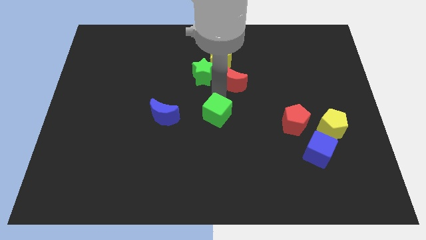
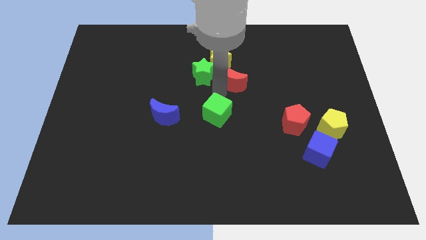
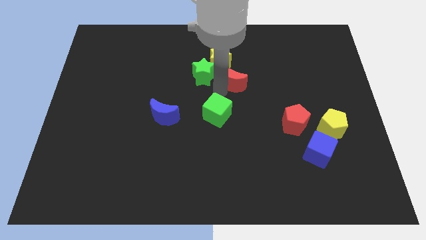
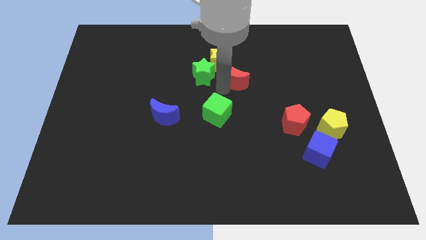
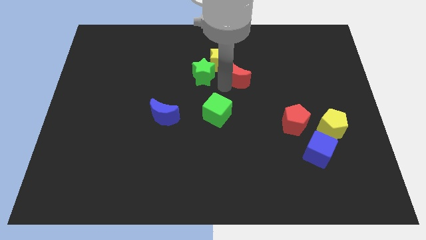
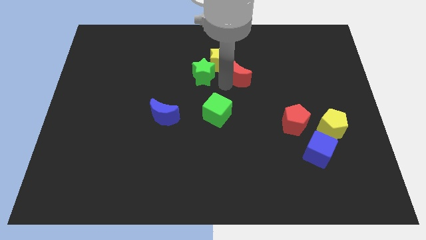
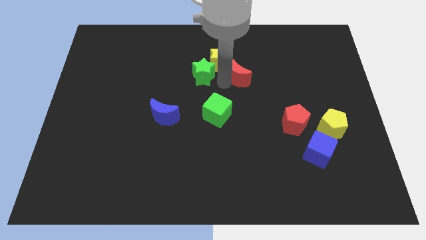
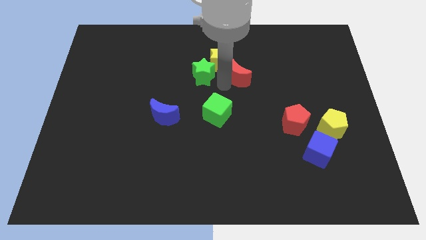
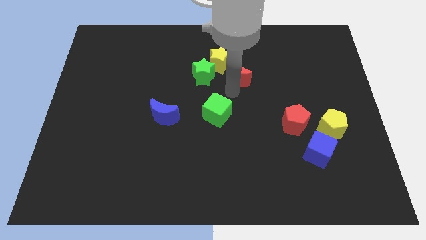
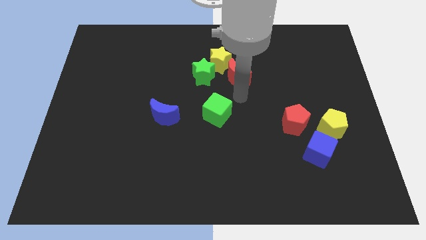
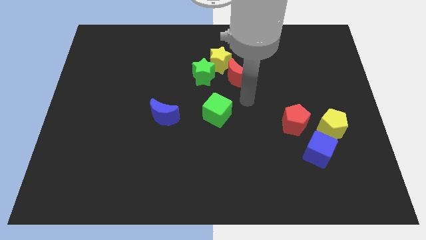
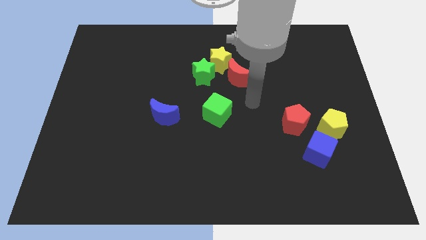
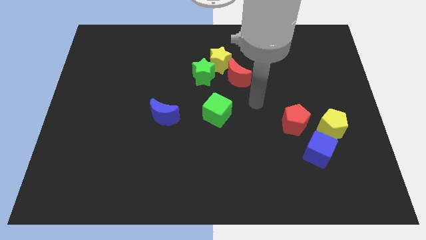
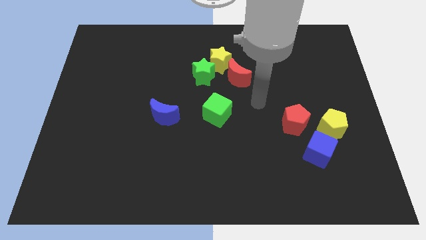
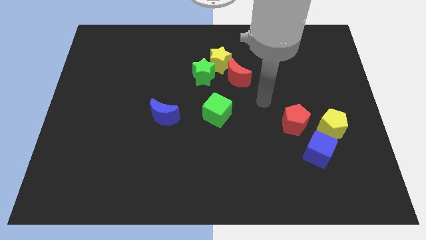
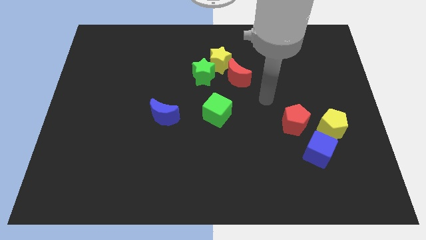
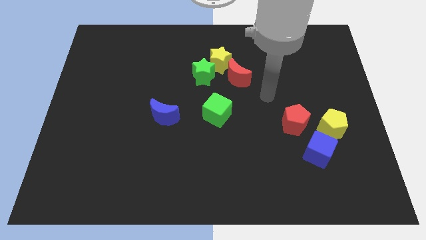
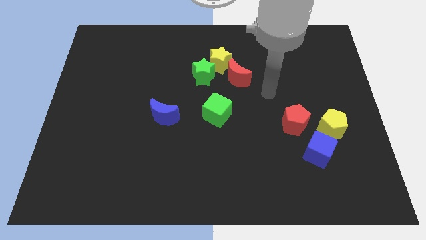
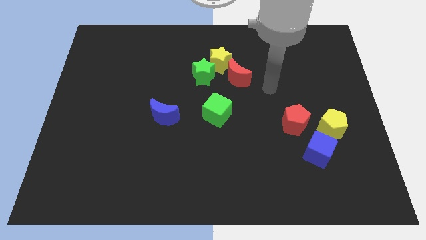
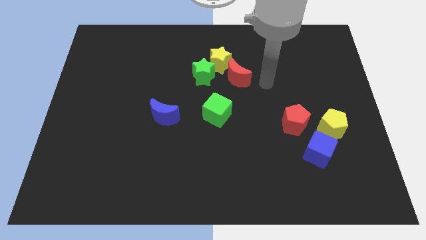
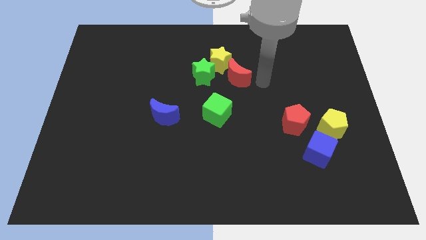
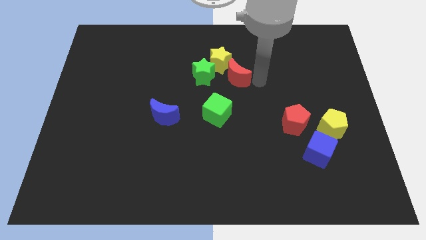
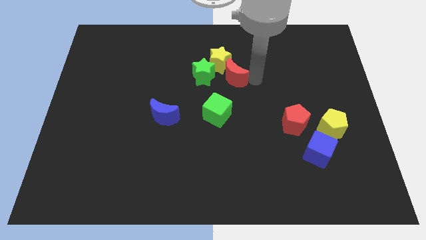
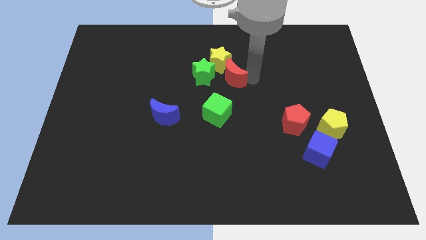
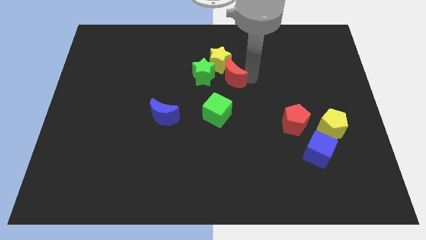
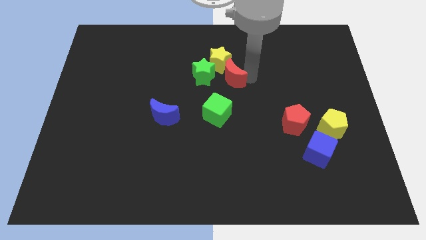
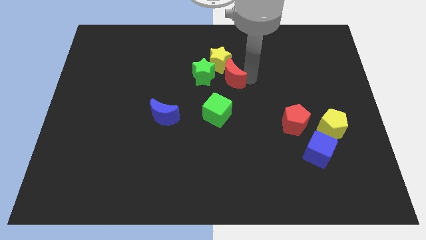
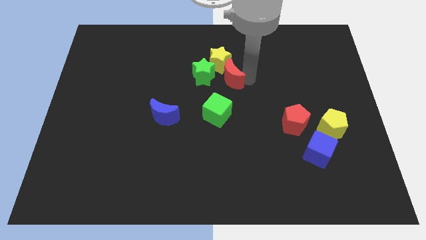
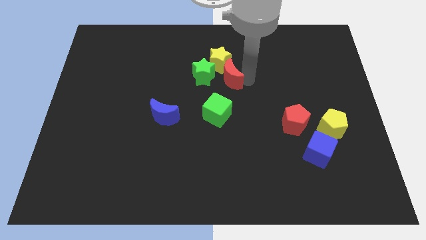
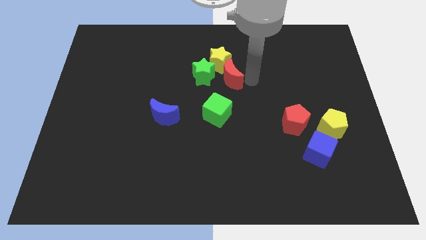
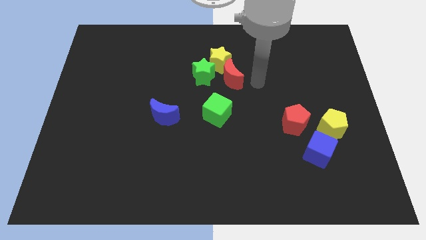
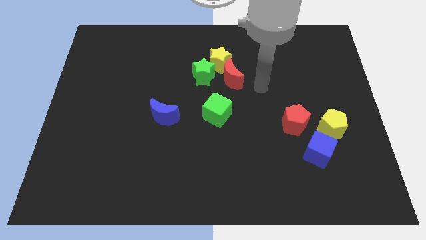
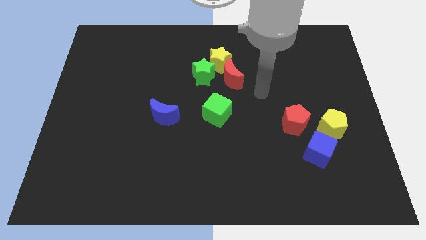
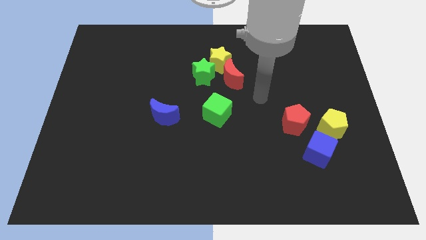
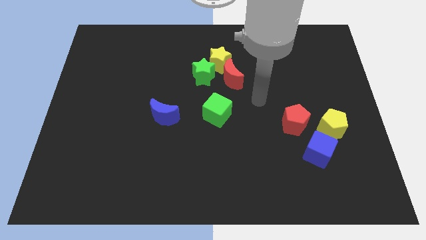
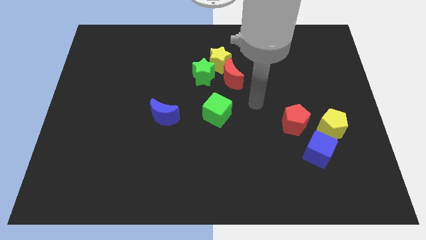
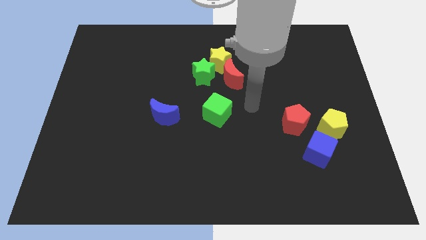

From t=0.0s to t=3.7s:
move the red crescent slightly to the top

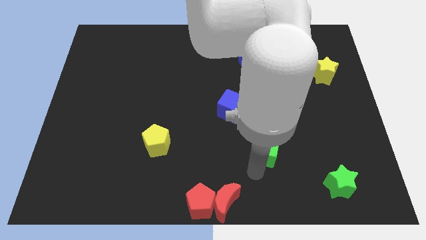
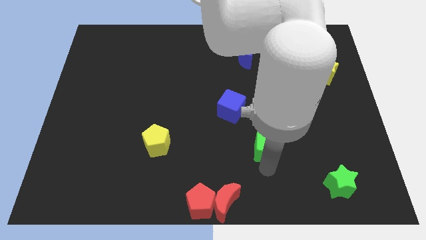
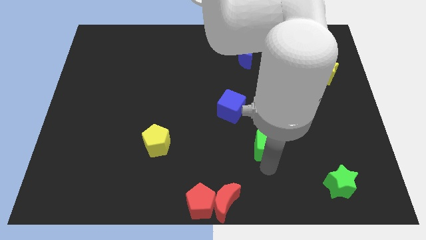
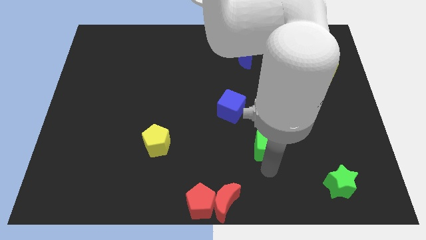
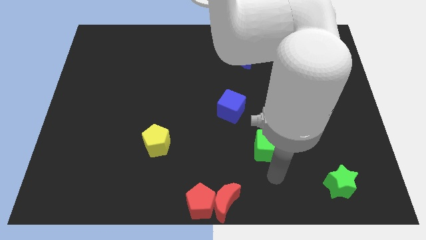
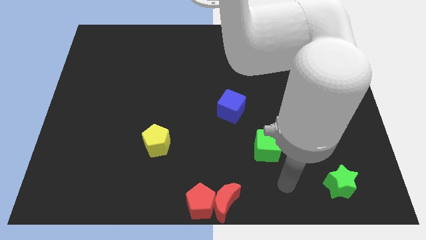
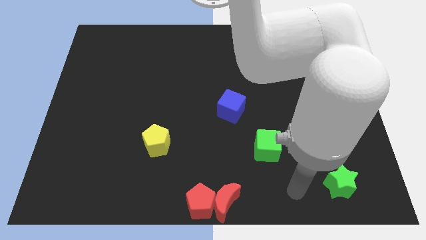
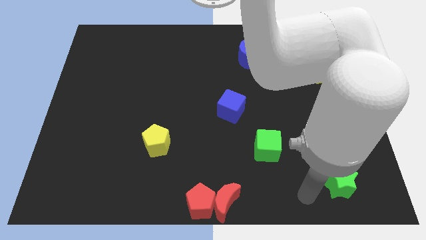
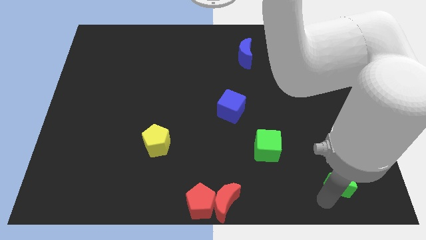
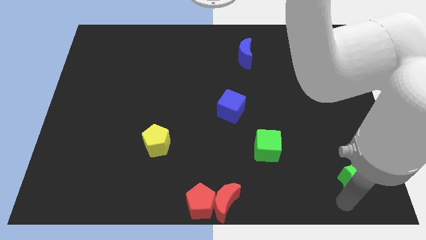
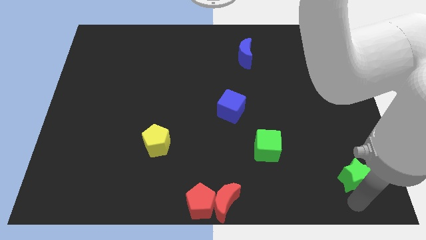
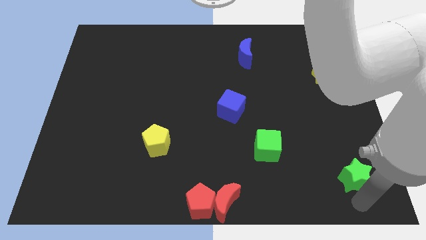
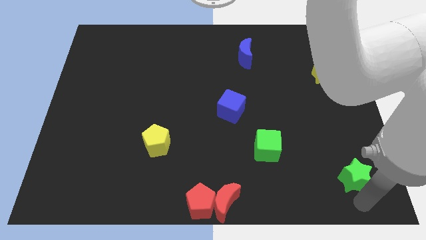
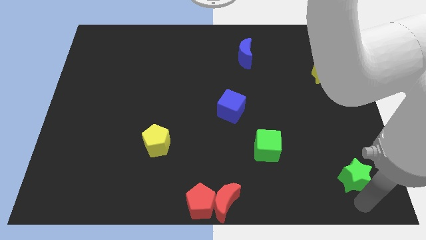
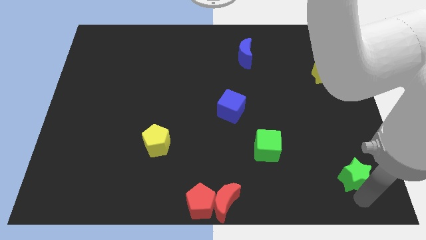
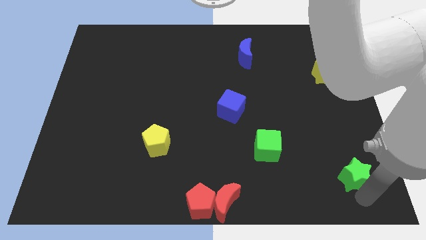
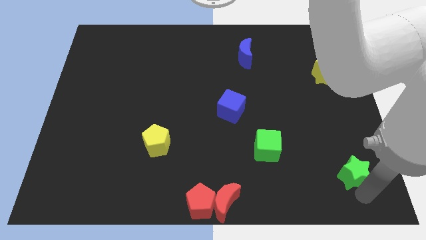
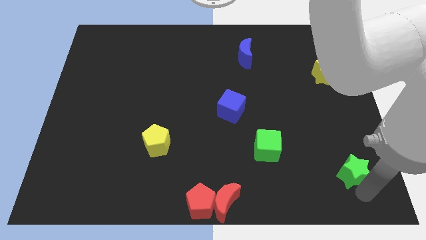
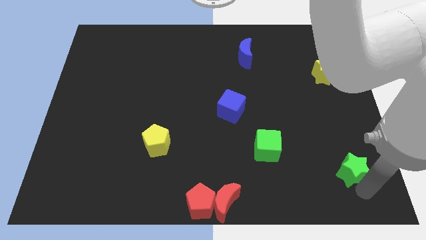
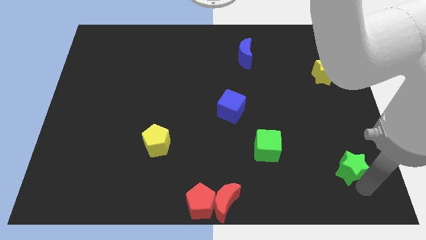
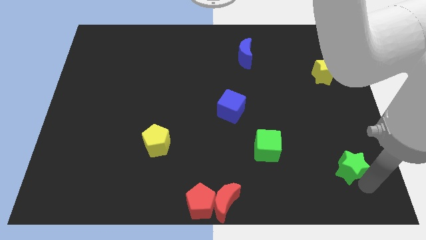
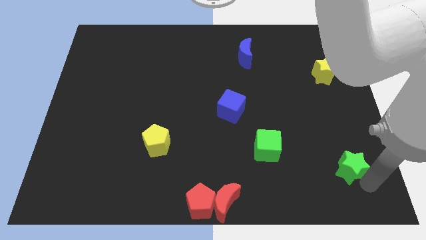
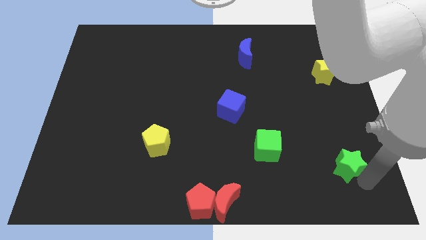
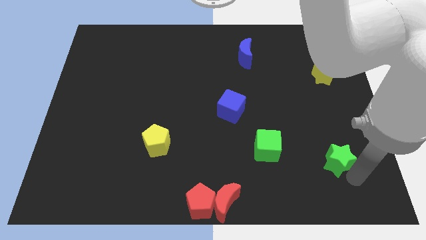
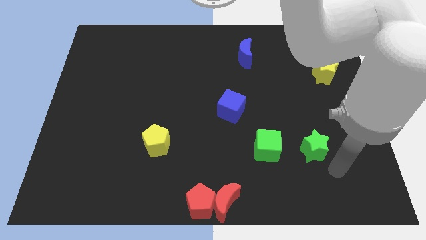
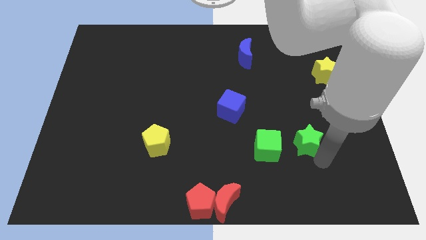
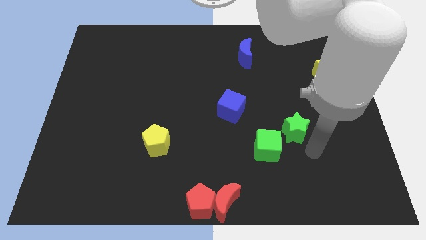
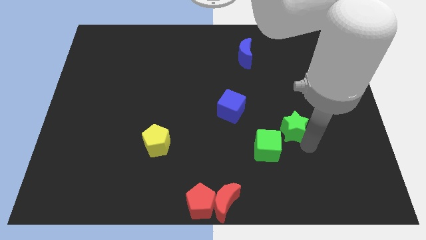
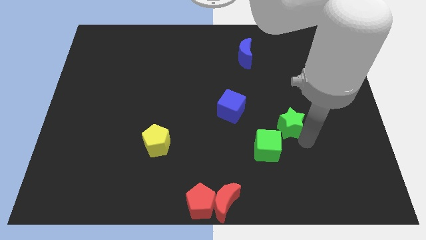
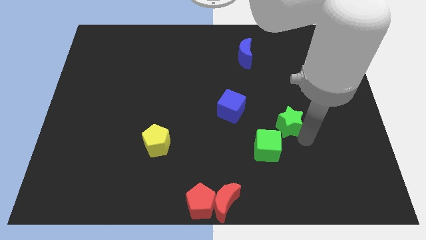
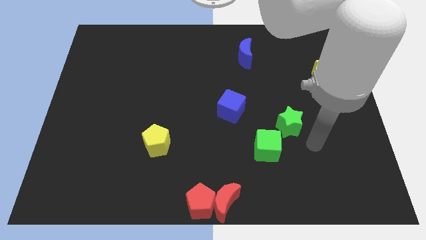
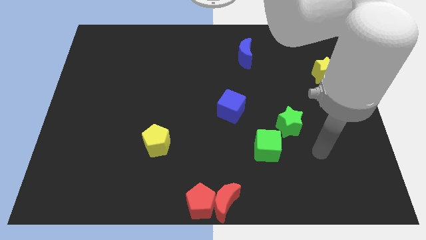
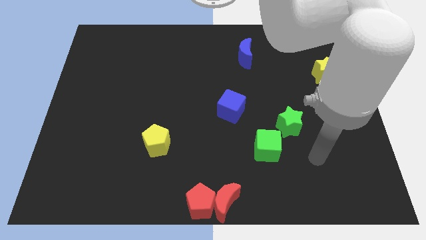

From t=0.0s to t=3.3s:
place the green star between green cube and yellow star

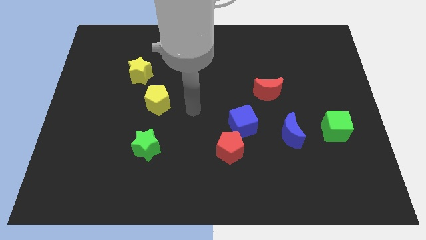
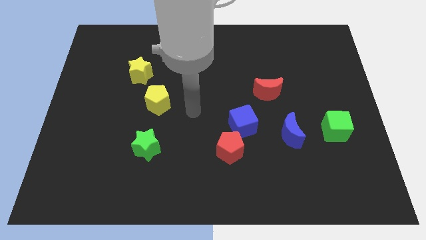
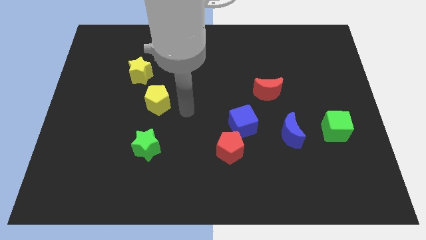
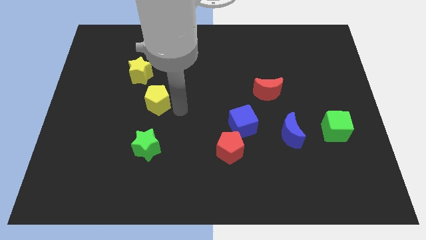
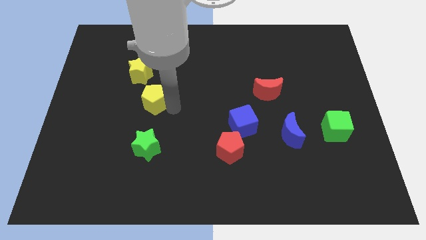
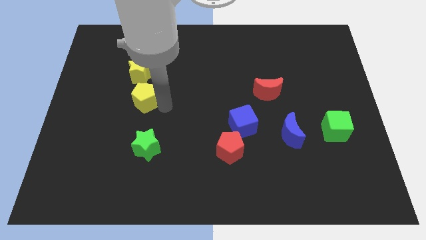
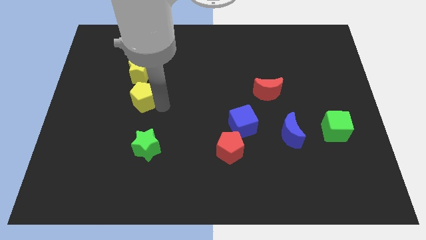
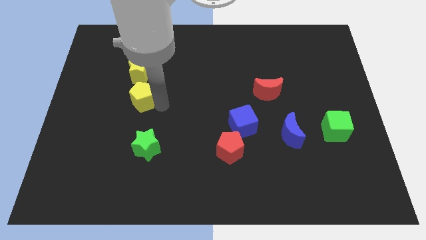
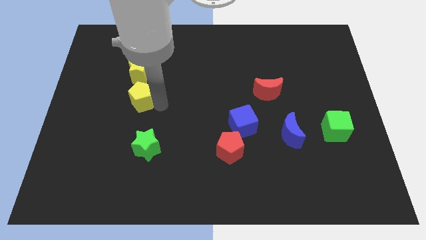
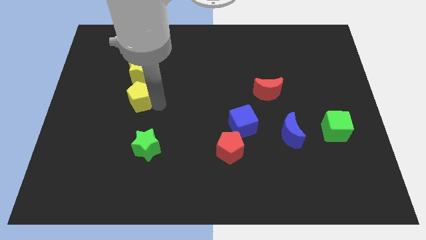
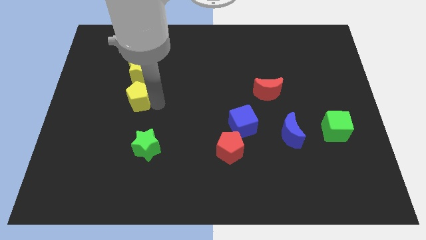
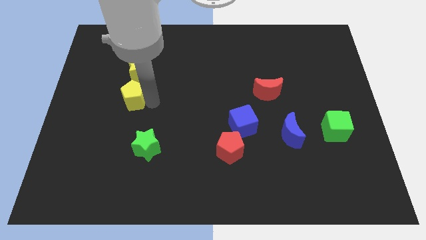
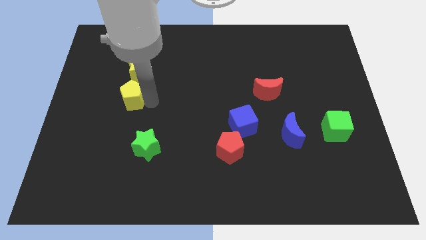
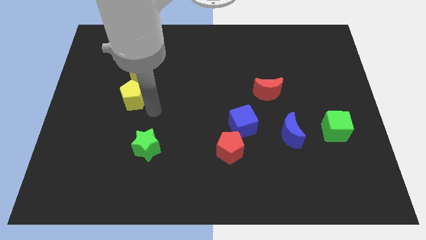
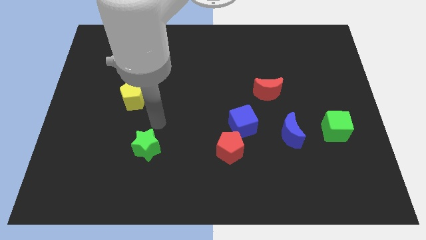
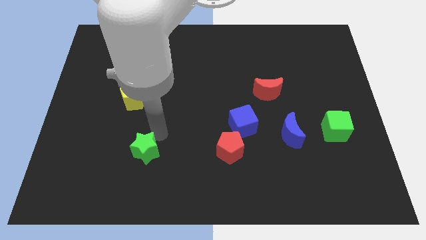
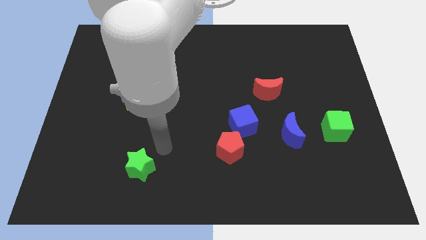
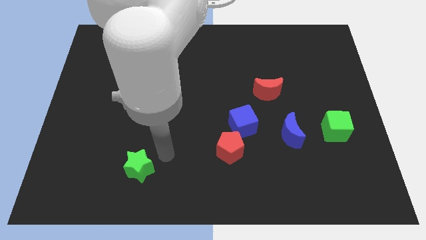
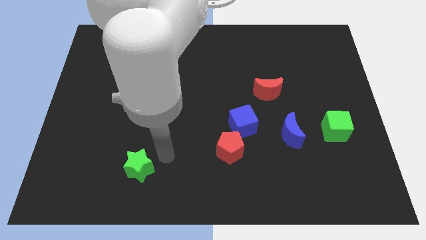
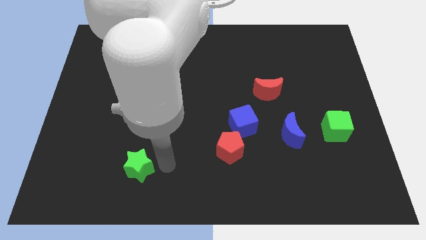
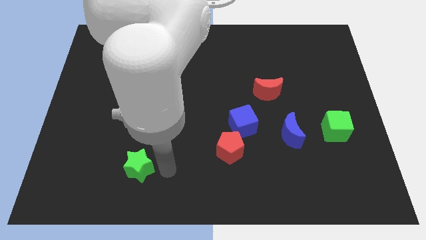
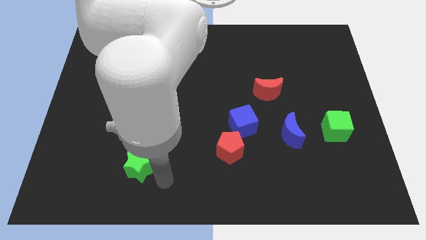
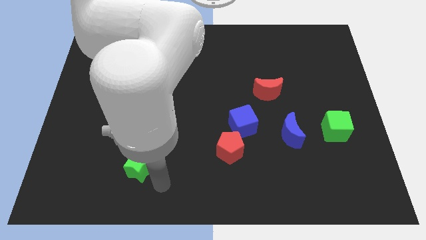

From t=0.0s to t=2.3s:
slightly move the green star to the down
